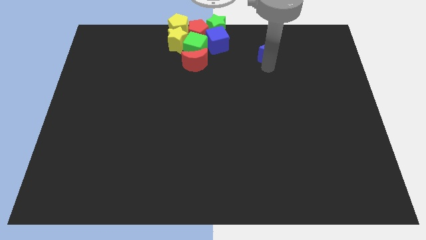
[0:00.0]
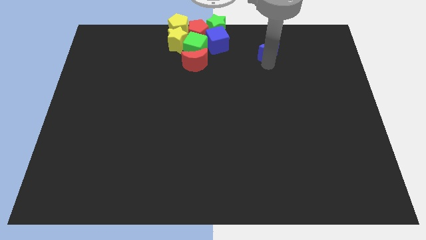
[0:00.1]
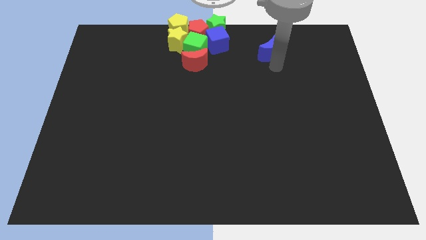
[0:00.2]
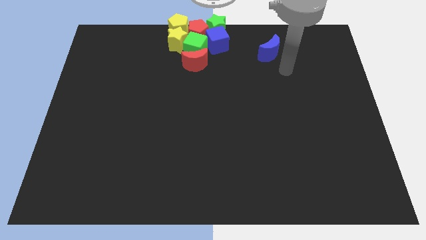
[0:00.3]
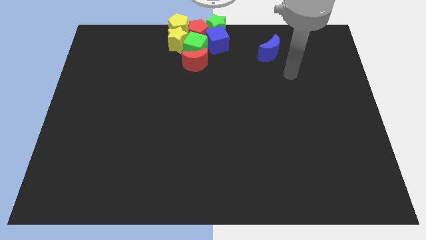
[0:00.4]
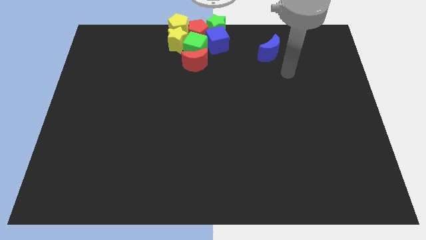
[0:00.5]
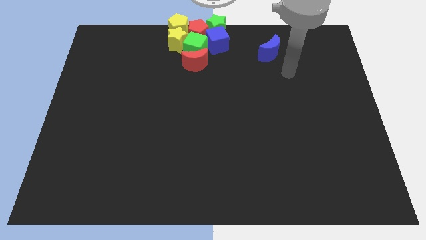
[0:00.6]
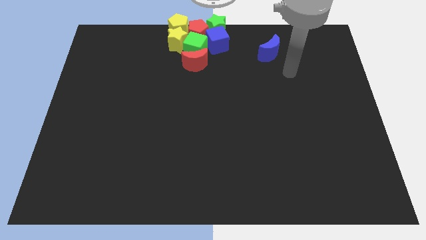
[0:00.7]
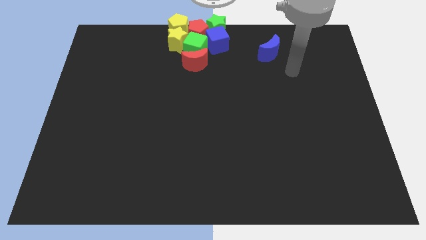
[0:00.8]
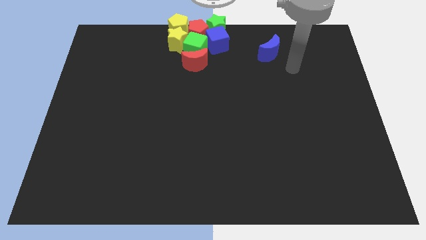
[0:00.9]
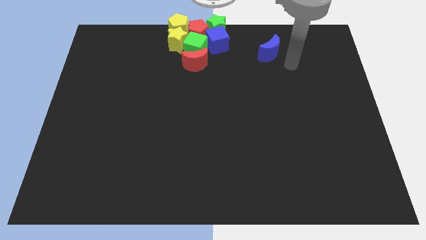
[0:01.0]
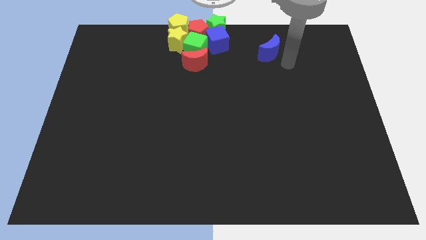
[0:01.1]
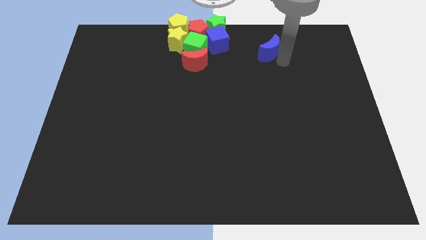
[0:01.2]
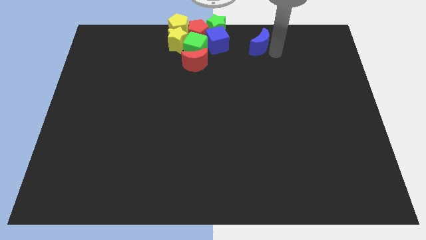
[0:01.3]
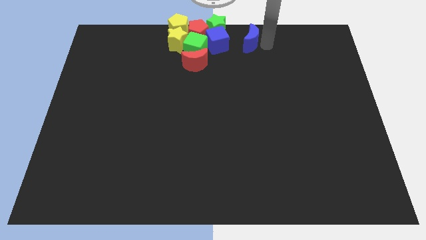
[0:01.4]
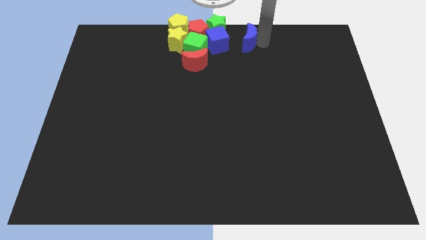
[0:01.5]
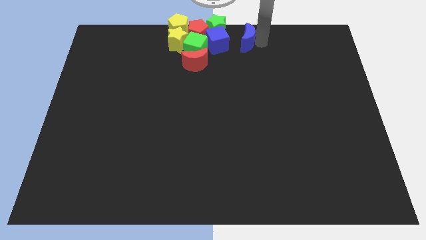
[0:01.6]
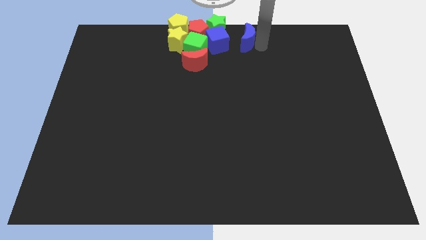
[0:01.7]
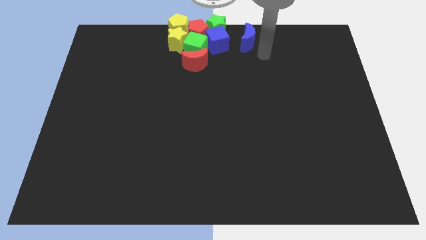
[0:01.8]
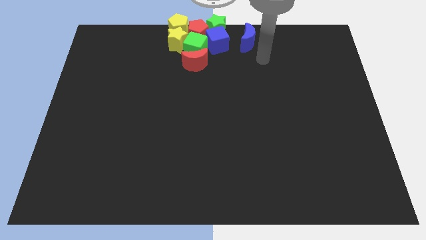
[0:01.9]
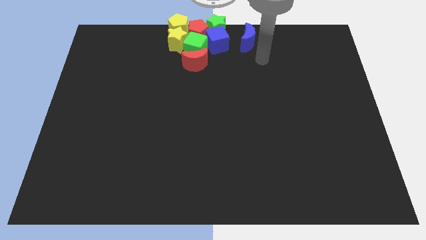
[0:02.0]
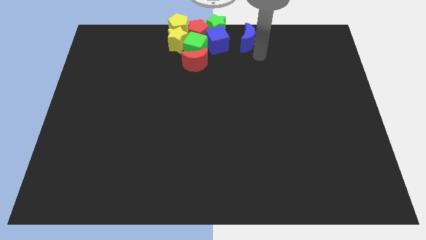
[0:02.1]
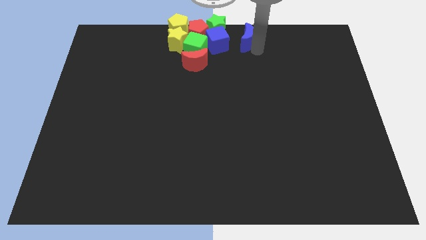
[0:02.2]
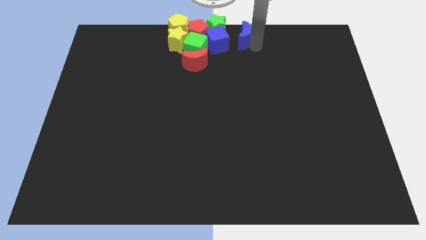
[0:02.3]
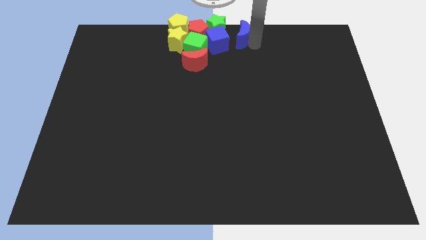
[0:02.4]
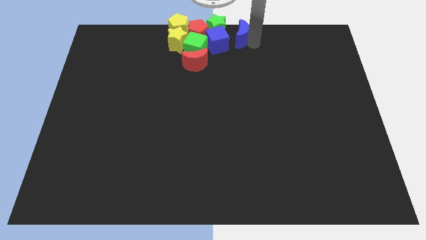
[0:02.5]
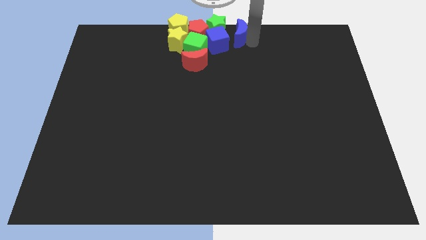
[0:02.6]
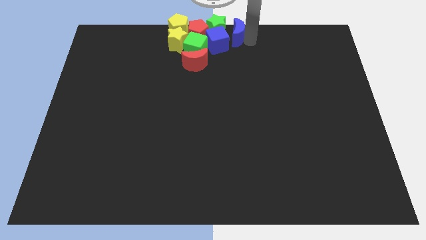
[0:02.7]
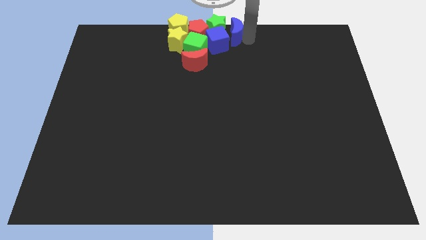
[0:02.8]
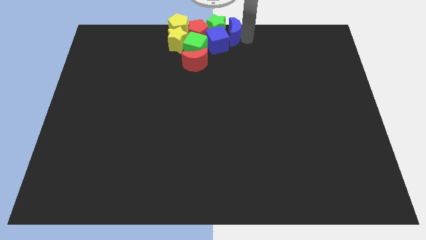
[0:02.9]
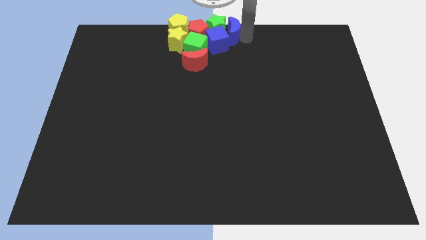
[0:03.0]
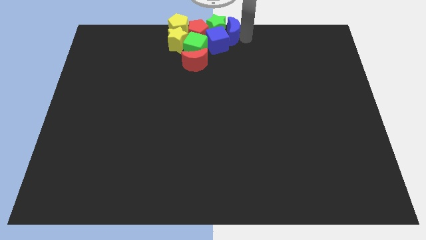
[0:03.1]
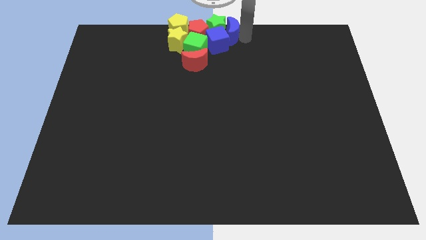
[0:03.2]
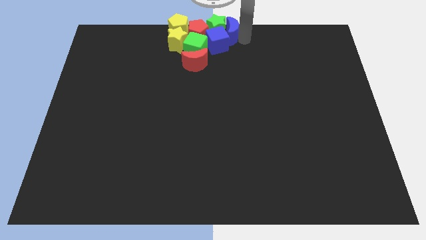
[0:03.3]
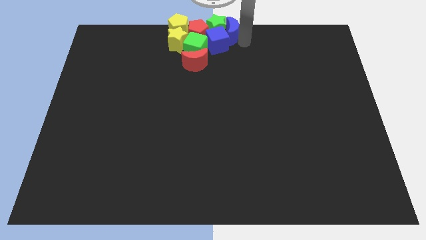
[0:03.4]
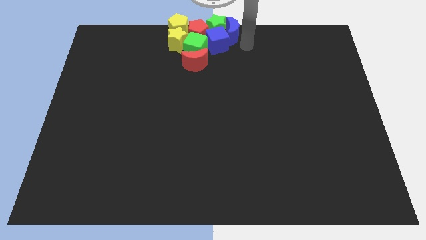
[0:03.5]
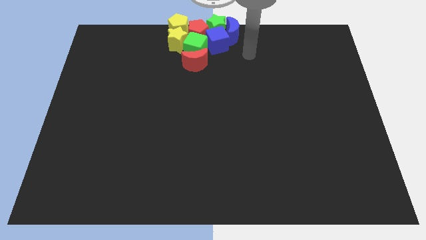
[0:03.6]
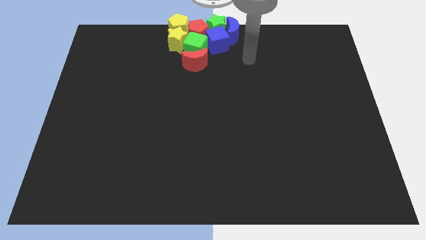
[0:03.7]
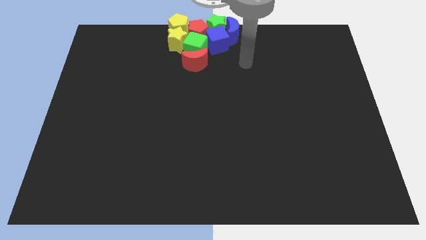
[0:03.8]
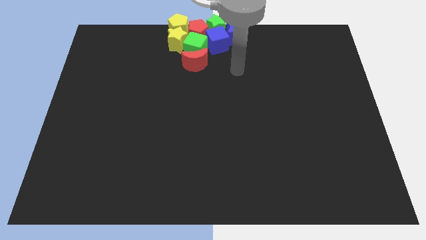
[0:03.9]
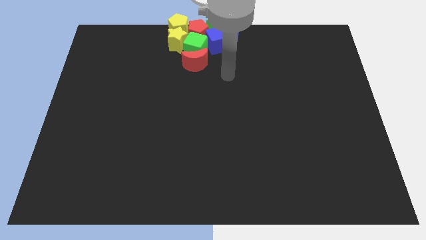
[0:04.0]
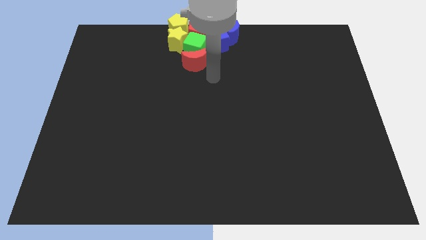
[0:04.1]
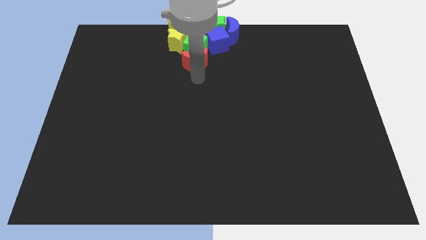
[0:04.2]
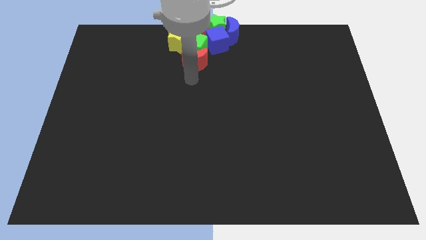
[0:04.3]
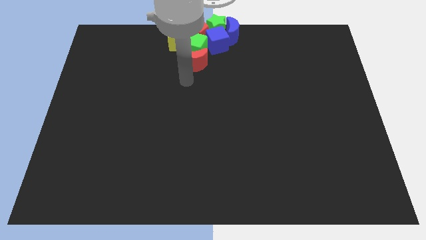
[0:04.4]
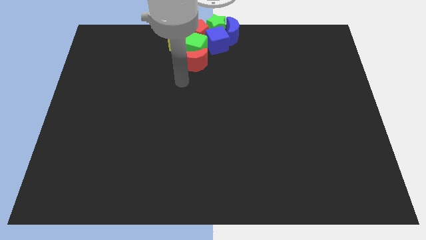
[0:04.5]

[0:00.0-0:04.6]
place the blue crescent right to the green star

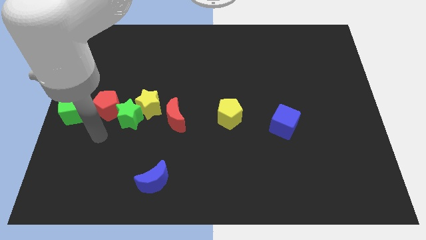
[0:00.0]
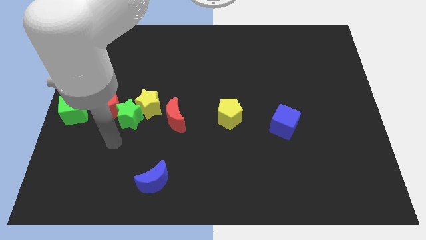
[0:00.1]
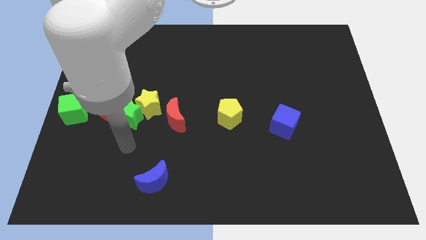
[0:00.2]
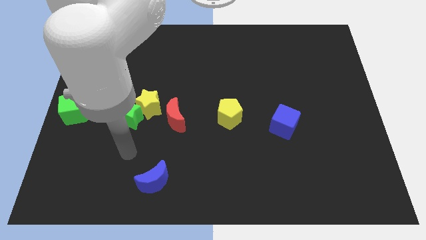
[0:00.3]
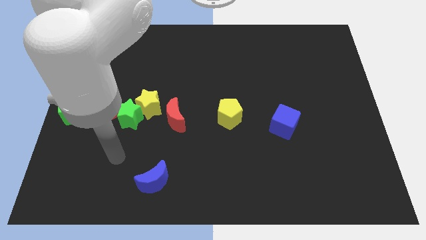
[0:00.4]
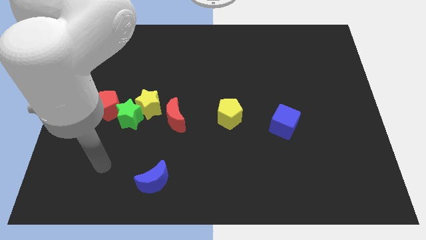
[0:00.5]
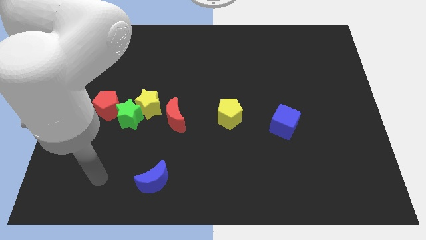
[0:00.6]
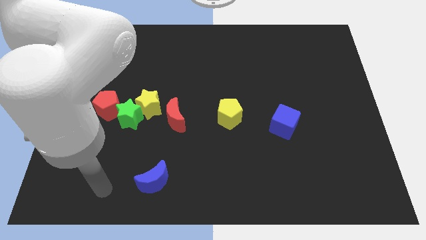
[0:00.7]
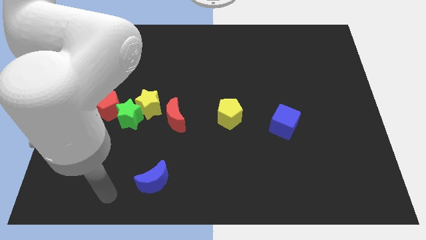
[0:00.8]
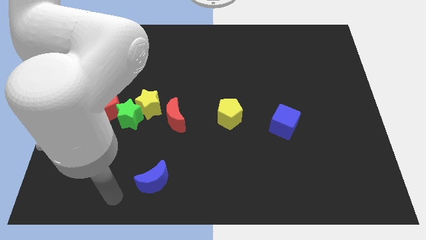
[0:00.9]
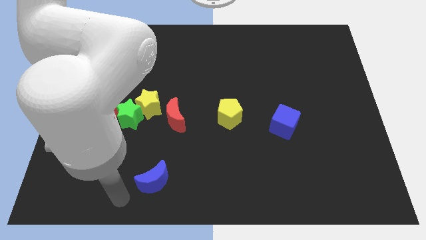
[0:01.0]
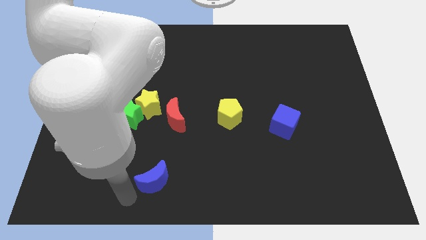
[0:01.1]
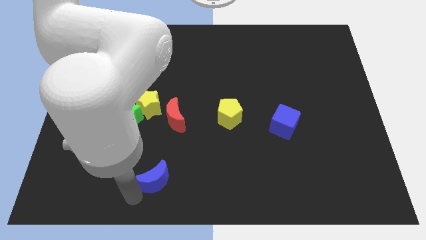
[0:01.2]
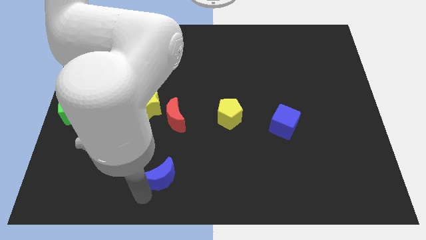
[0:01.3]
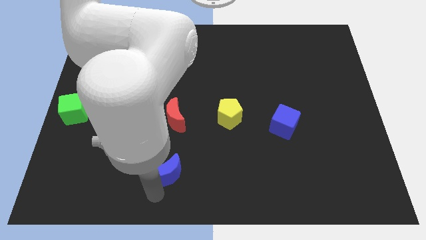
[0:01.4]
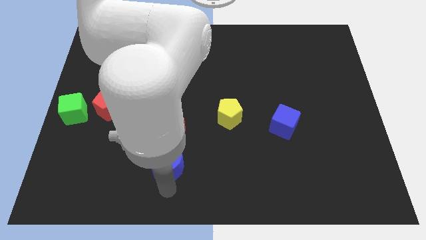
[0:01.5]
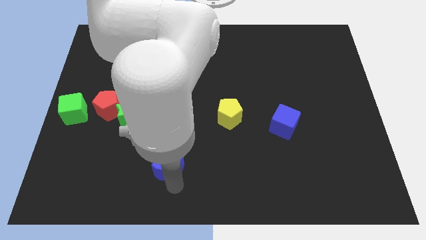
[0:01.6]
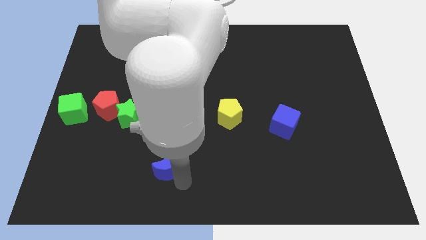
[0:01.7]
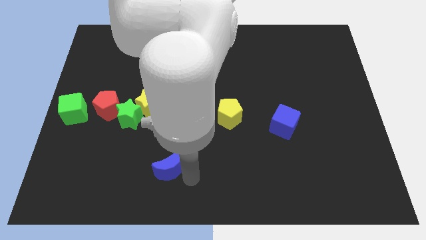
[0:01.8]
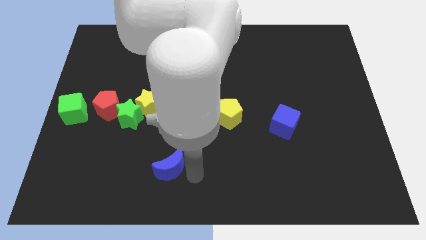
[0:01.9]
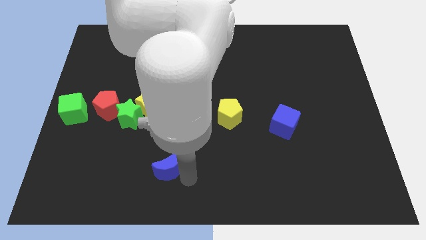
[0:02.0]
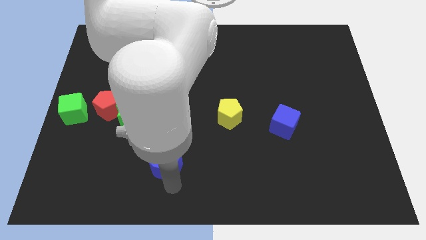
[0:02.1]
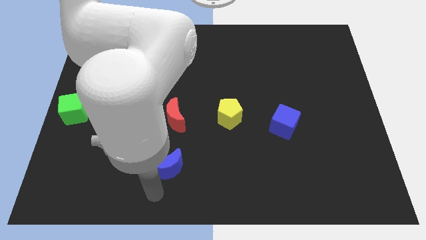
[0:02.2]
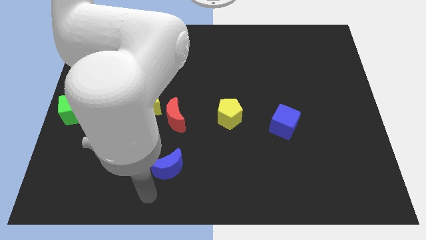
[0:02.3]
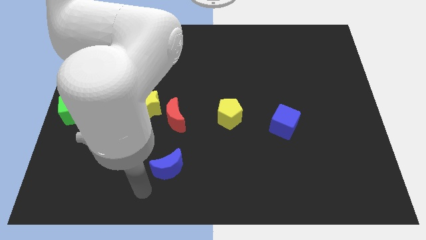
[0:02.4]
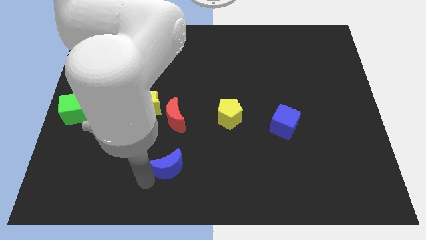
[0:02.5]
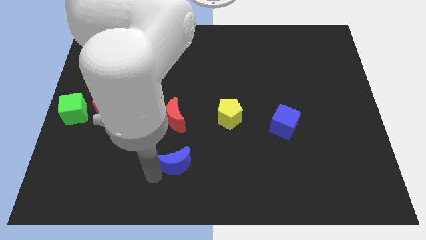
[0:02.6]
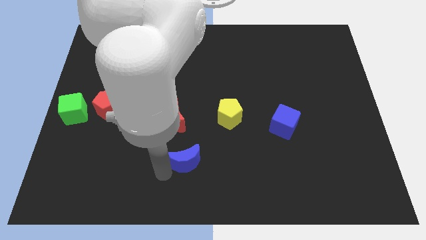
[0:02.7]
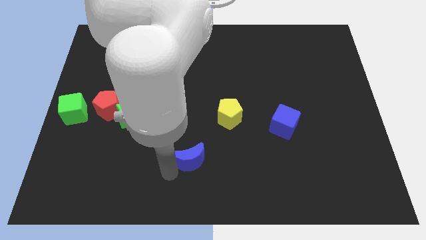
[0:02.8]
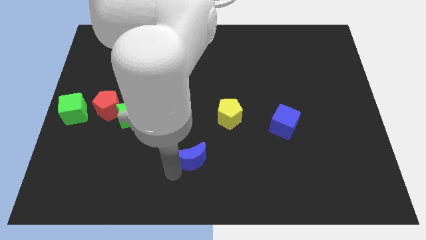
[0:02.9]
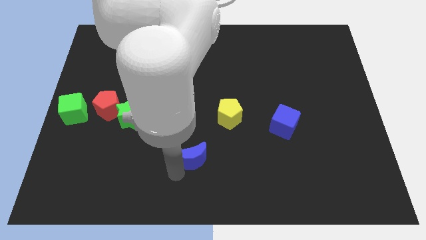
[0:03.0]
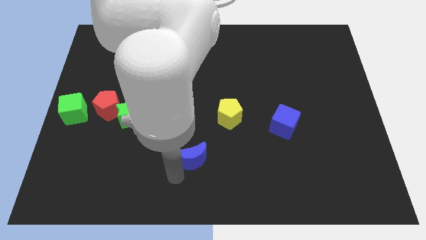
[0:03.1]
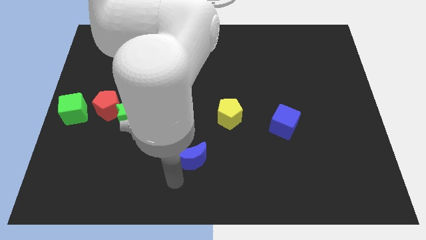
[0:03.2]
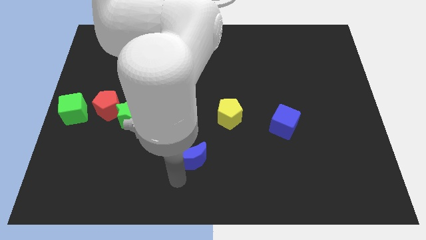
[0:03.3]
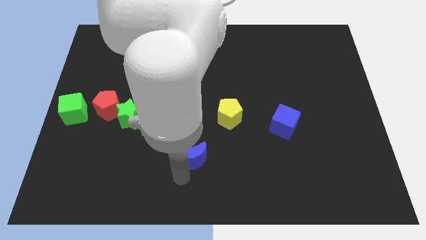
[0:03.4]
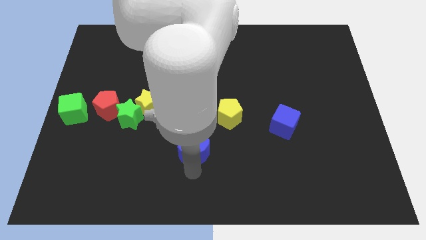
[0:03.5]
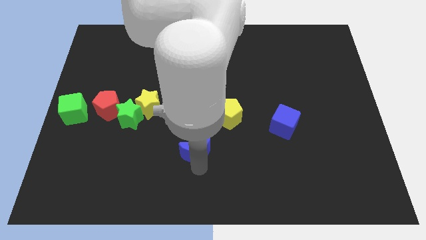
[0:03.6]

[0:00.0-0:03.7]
place the blue crescent below the red crescent

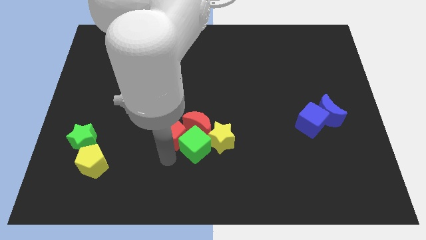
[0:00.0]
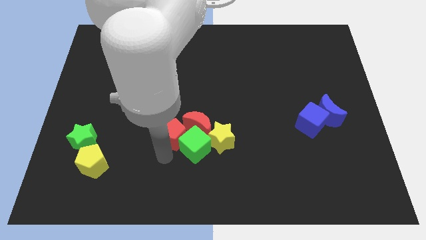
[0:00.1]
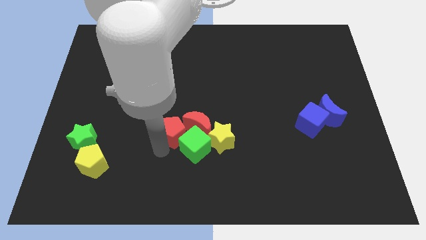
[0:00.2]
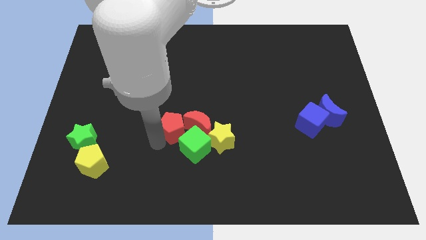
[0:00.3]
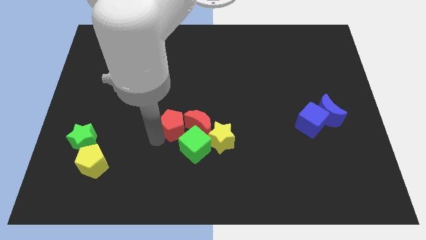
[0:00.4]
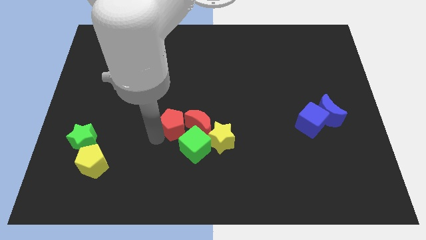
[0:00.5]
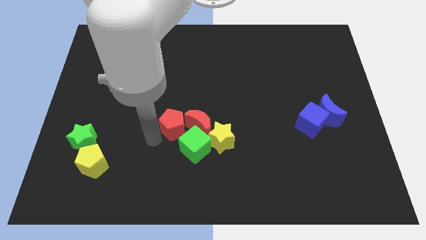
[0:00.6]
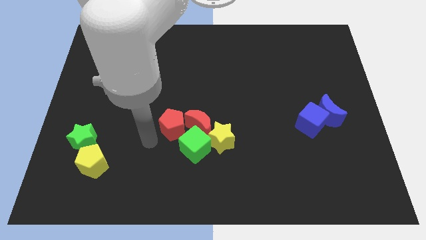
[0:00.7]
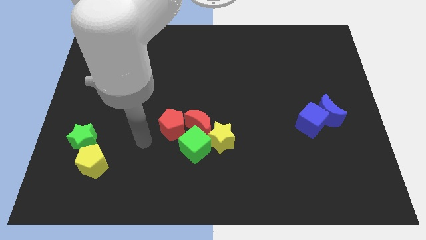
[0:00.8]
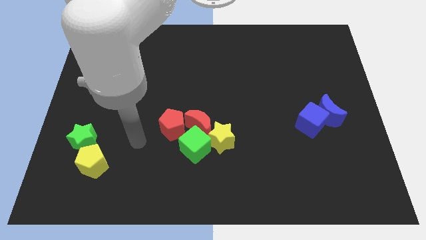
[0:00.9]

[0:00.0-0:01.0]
push red pentagon in red moon
